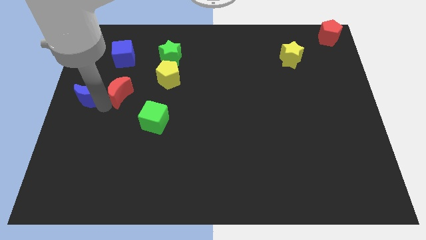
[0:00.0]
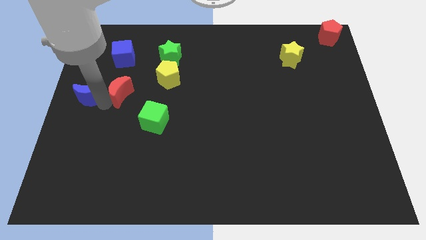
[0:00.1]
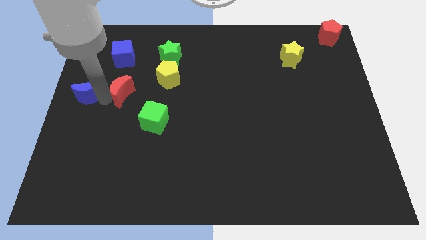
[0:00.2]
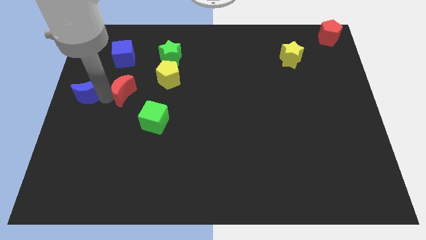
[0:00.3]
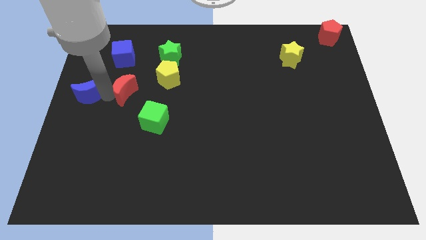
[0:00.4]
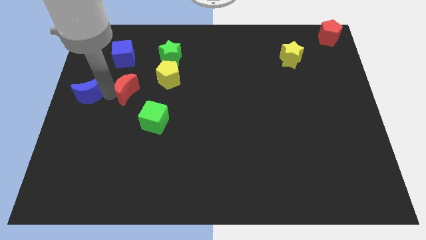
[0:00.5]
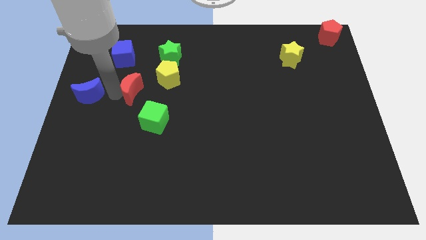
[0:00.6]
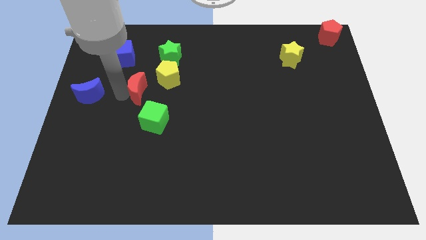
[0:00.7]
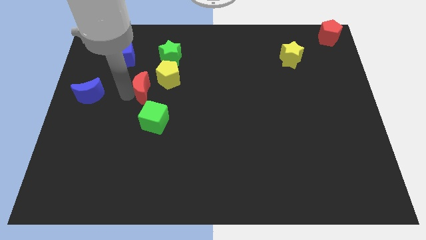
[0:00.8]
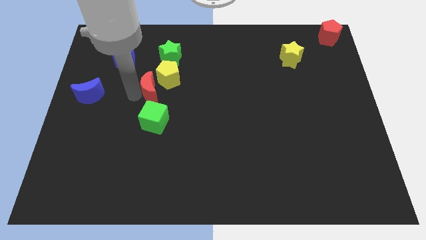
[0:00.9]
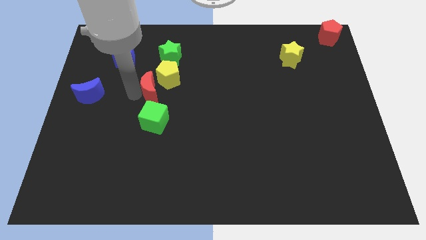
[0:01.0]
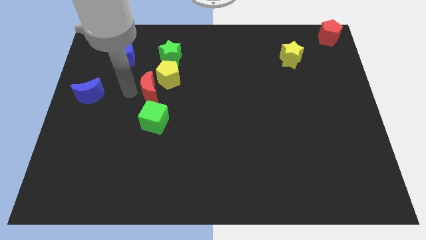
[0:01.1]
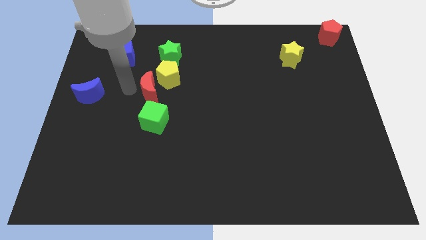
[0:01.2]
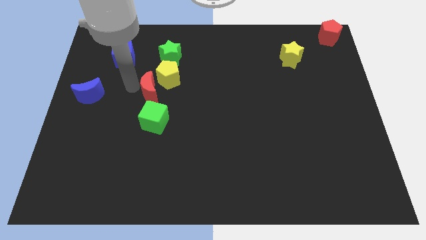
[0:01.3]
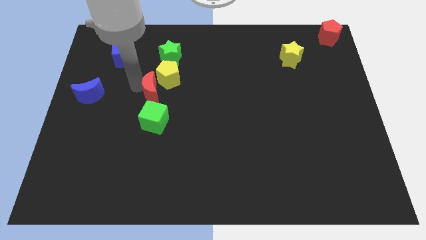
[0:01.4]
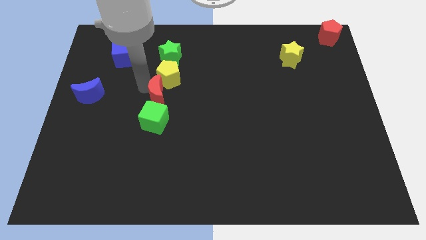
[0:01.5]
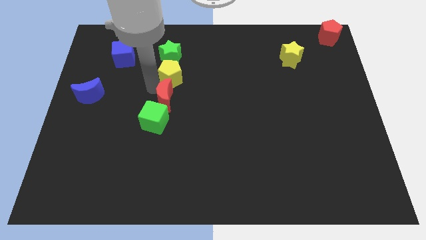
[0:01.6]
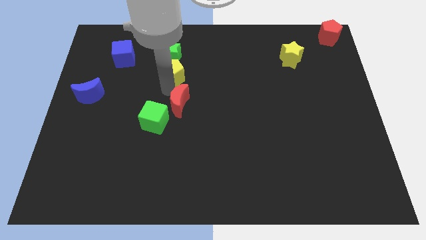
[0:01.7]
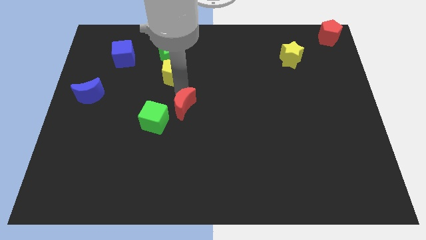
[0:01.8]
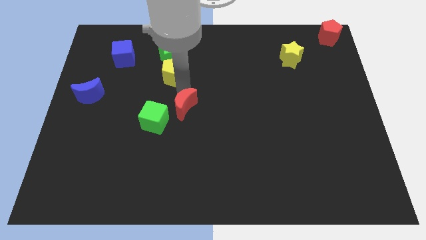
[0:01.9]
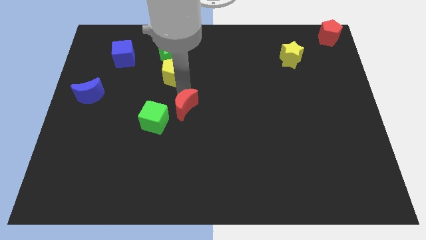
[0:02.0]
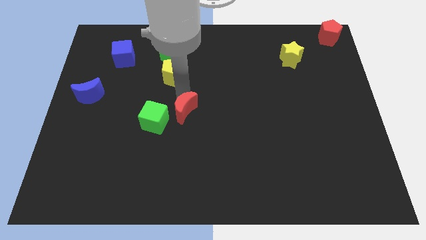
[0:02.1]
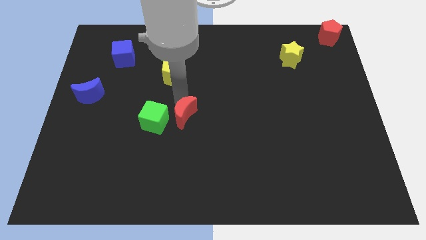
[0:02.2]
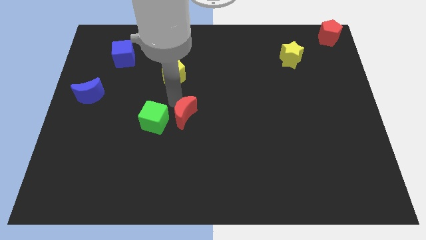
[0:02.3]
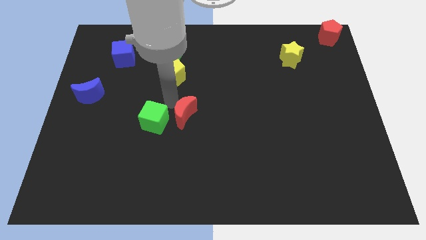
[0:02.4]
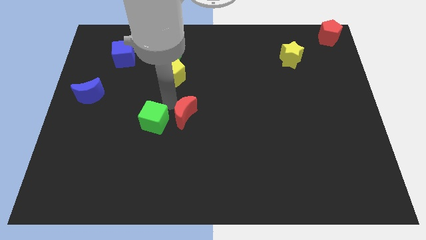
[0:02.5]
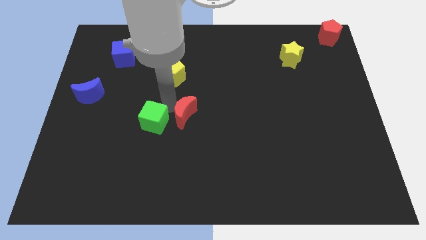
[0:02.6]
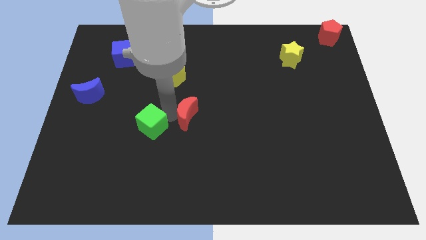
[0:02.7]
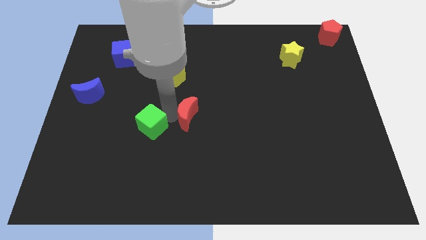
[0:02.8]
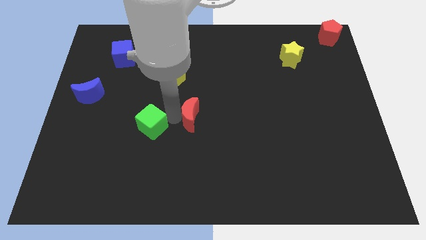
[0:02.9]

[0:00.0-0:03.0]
slide the red crescent towards the center of the board

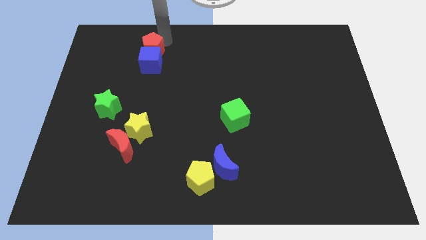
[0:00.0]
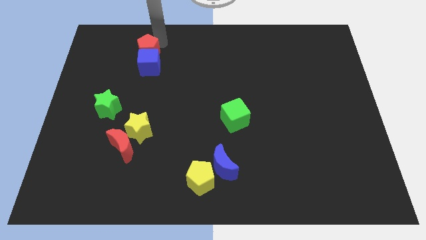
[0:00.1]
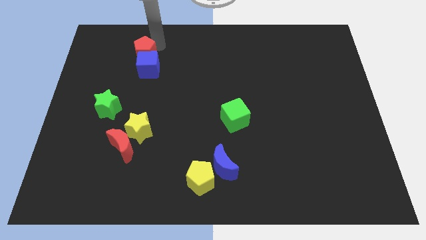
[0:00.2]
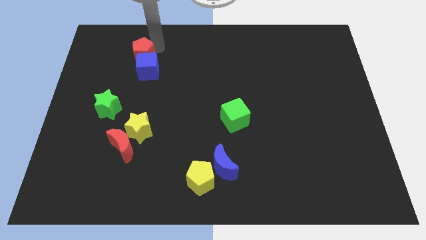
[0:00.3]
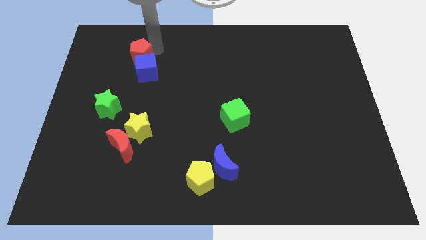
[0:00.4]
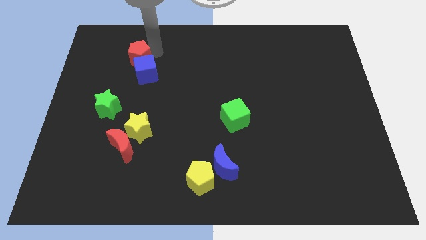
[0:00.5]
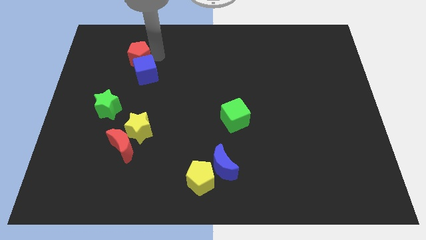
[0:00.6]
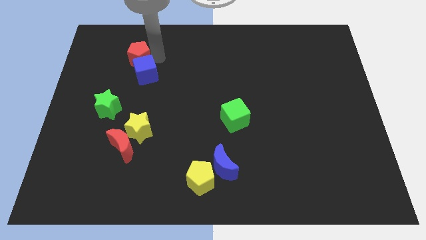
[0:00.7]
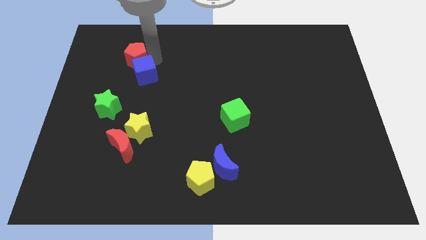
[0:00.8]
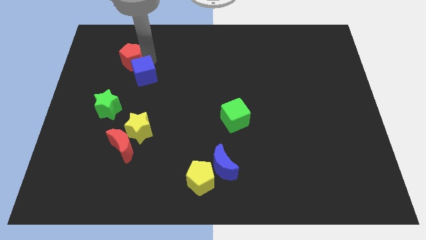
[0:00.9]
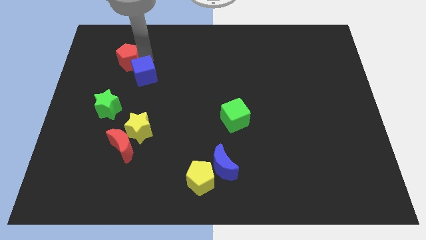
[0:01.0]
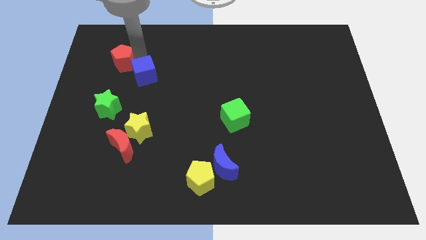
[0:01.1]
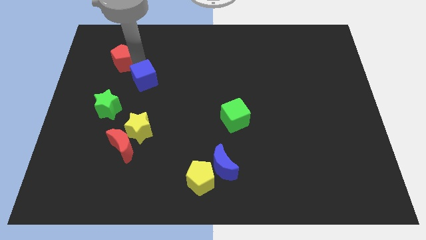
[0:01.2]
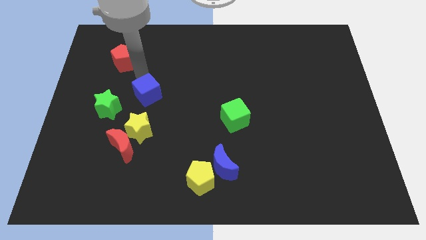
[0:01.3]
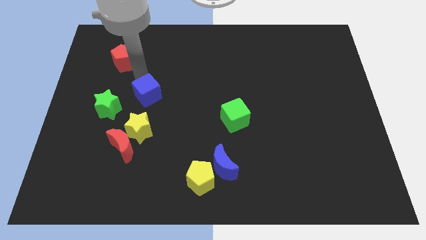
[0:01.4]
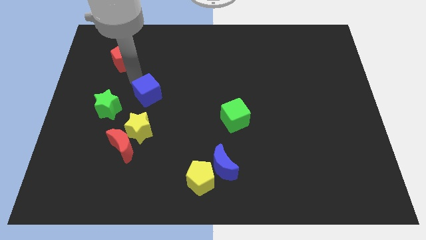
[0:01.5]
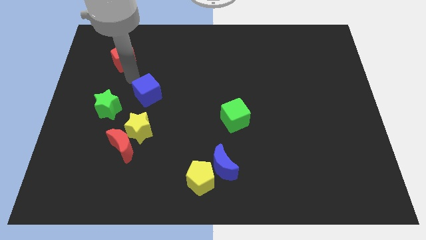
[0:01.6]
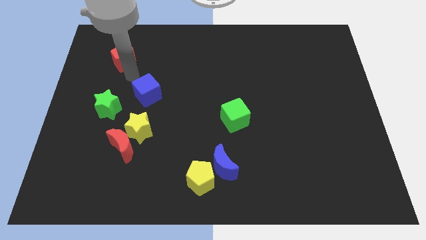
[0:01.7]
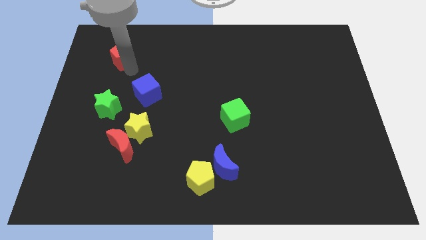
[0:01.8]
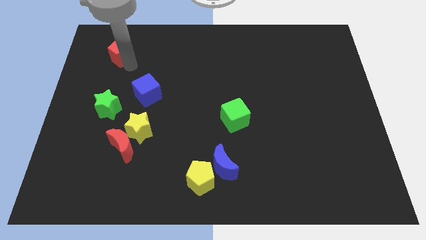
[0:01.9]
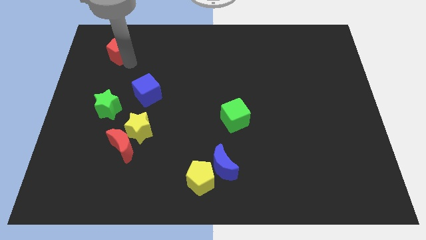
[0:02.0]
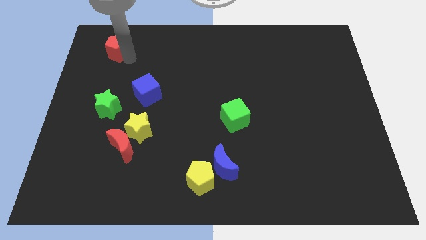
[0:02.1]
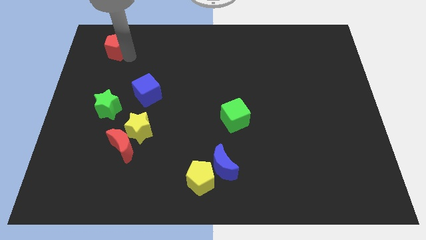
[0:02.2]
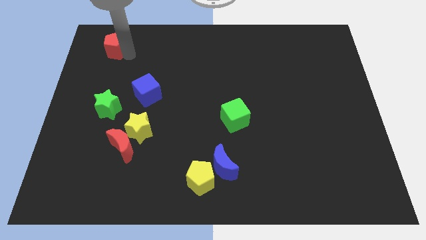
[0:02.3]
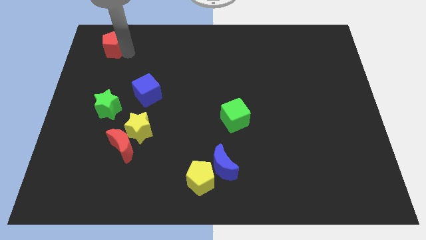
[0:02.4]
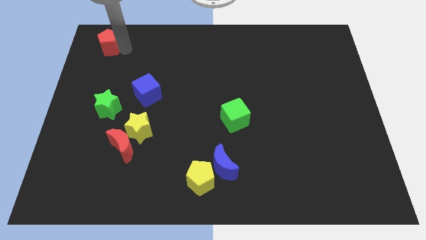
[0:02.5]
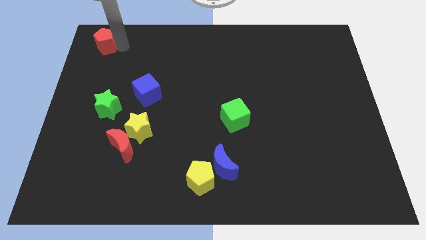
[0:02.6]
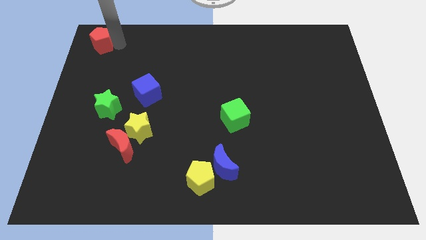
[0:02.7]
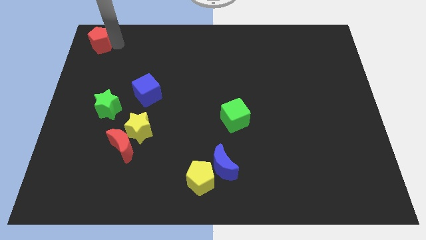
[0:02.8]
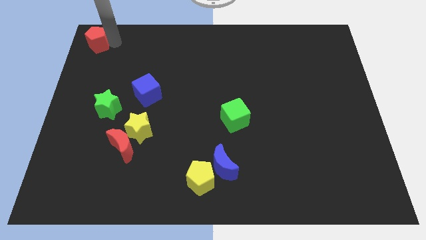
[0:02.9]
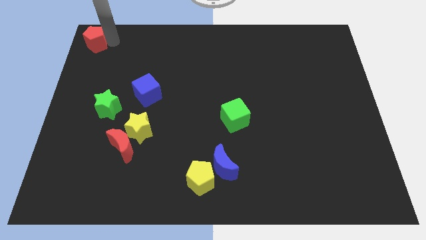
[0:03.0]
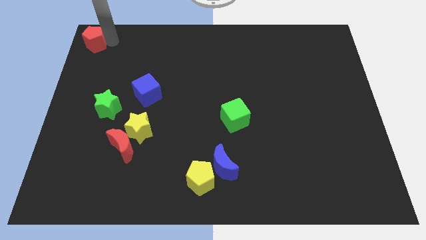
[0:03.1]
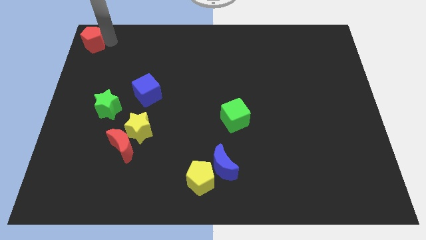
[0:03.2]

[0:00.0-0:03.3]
move the red pentagon to the top left of the board

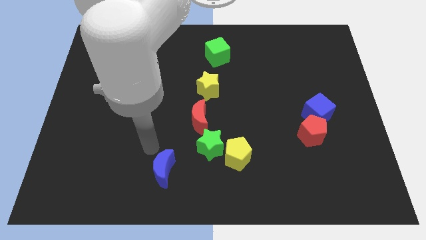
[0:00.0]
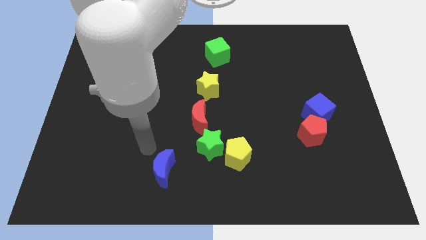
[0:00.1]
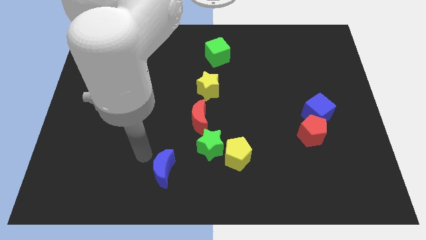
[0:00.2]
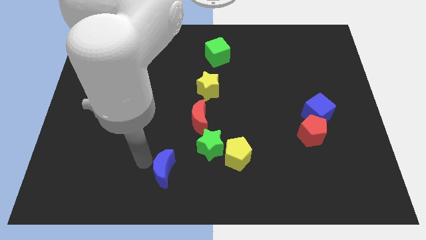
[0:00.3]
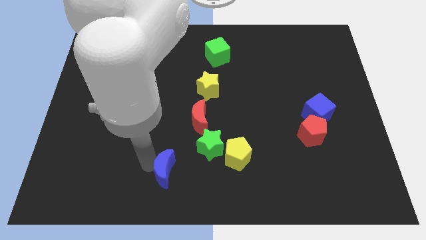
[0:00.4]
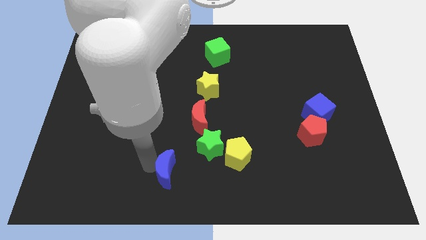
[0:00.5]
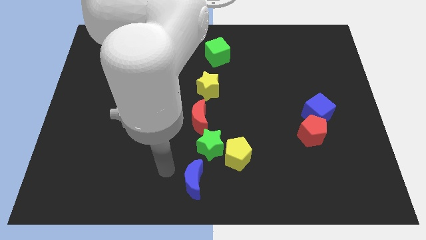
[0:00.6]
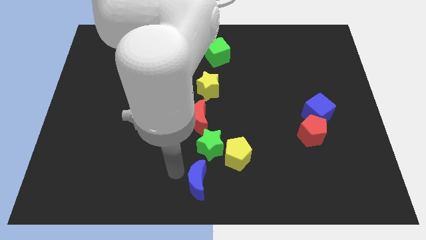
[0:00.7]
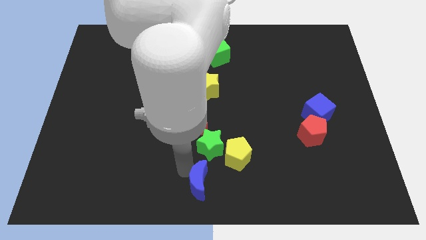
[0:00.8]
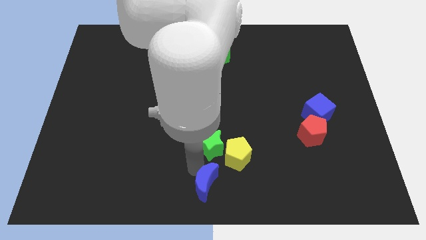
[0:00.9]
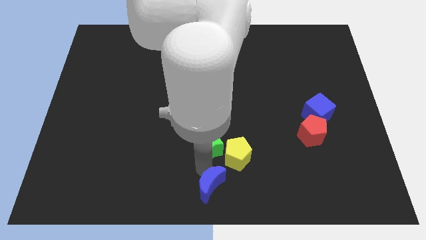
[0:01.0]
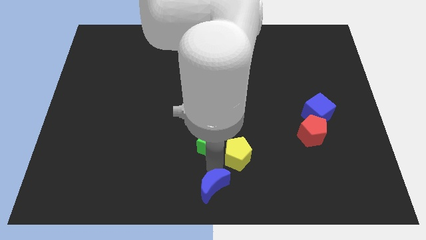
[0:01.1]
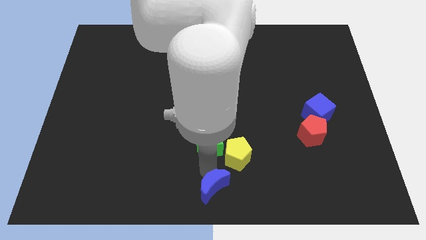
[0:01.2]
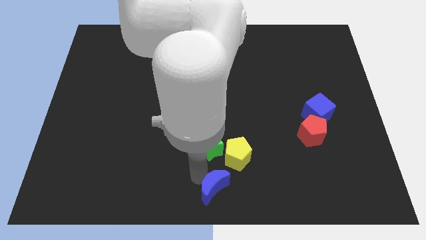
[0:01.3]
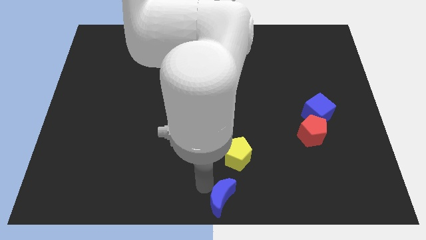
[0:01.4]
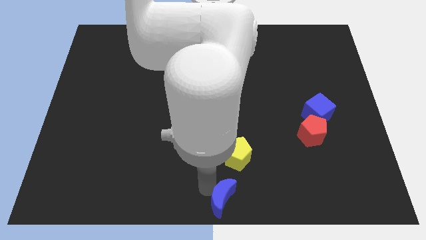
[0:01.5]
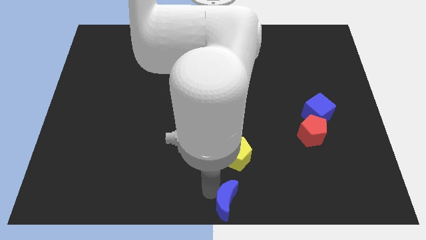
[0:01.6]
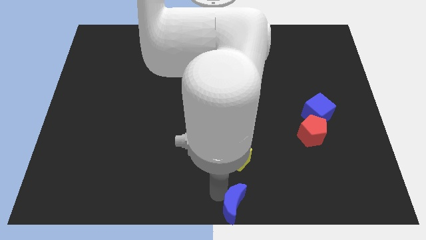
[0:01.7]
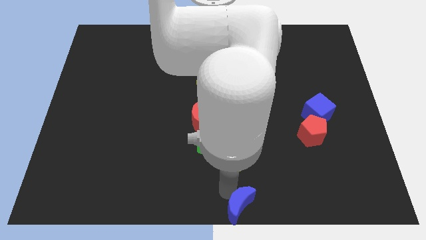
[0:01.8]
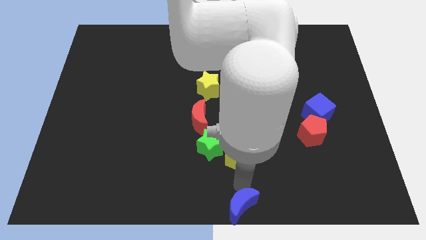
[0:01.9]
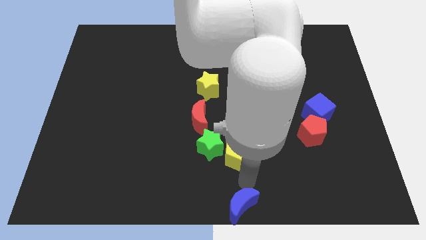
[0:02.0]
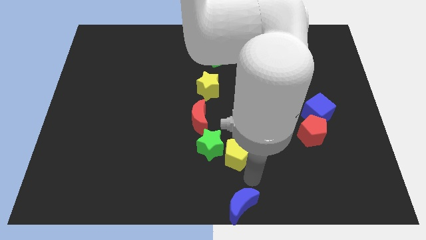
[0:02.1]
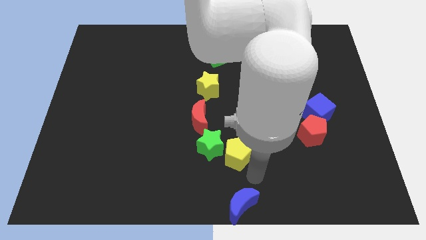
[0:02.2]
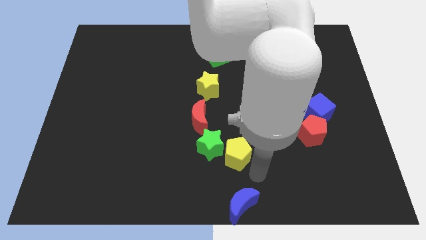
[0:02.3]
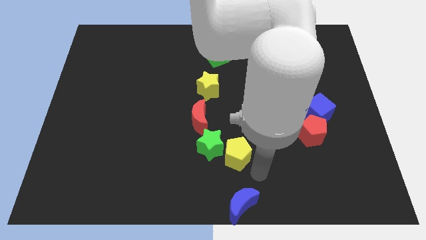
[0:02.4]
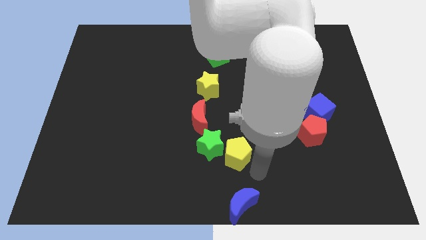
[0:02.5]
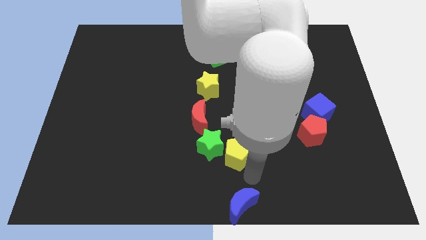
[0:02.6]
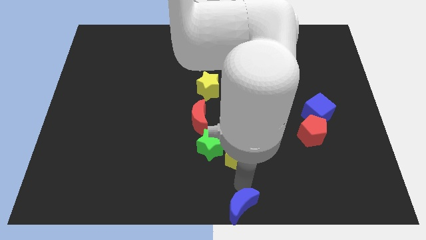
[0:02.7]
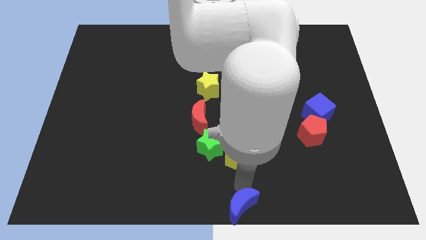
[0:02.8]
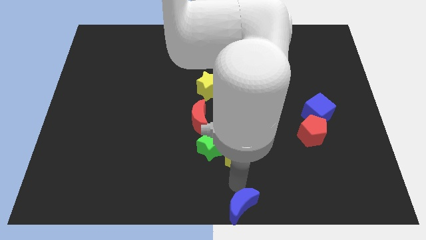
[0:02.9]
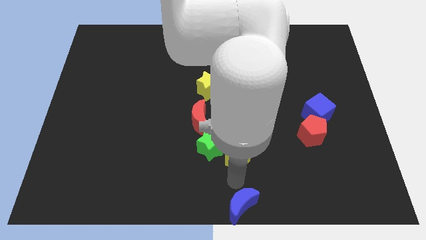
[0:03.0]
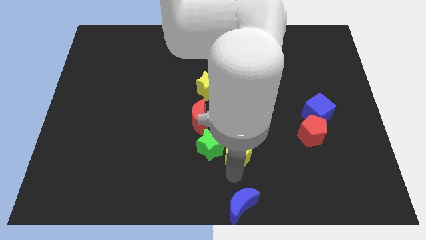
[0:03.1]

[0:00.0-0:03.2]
move the blue crescent to the bottom centre of the board
